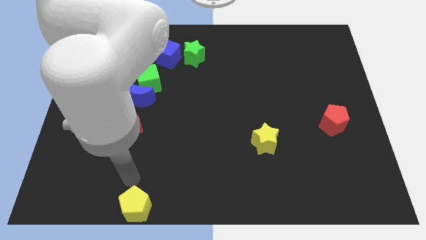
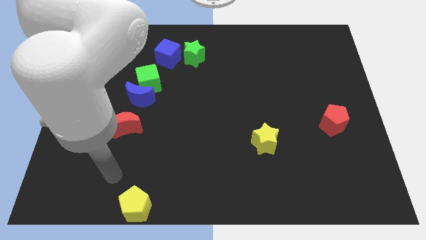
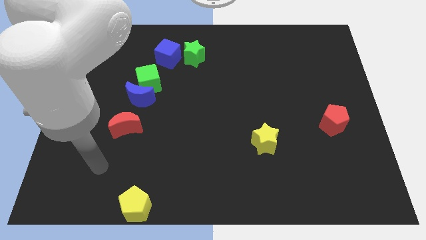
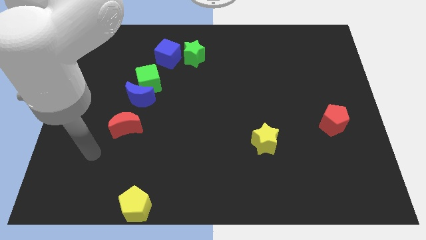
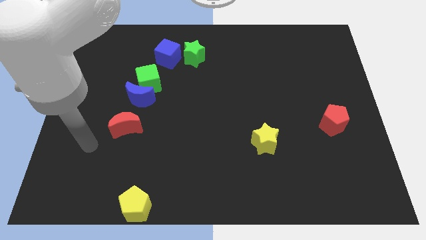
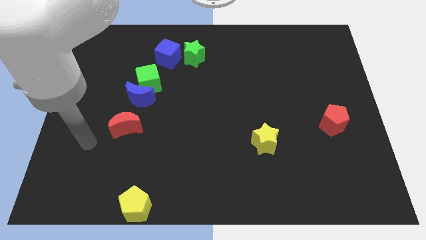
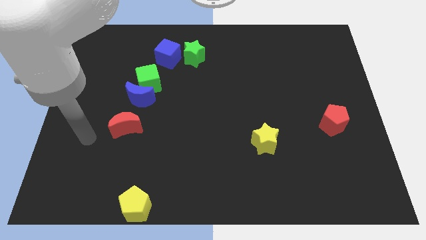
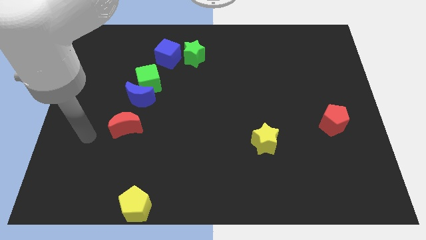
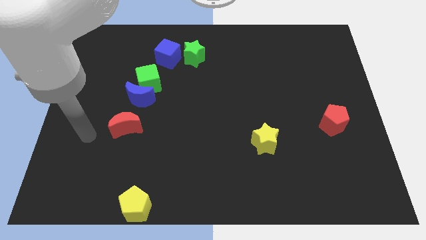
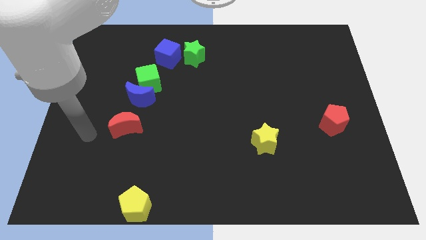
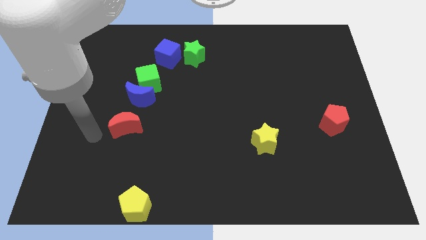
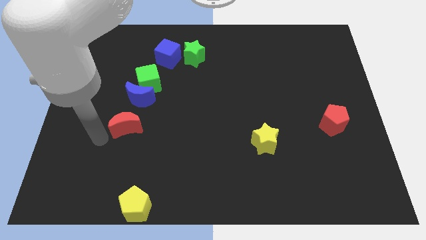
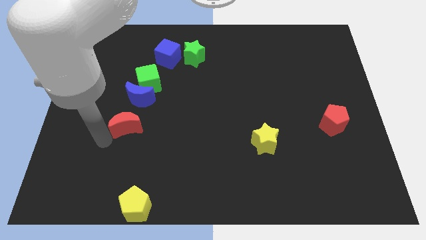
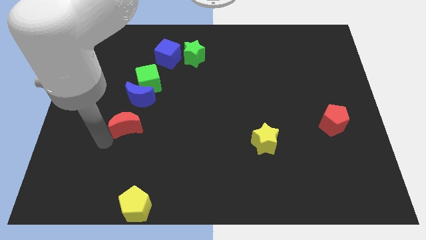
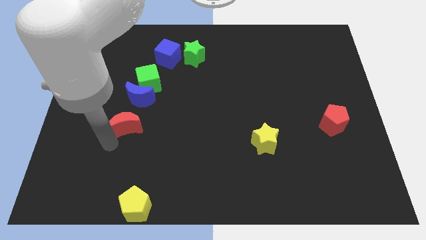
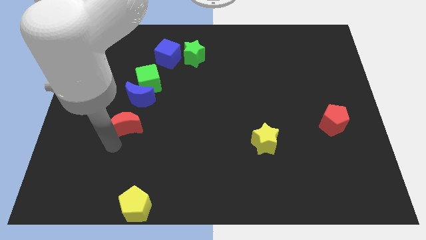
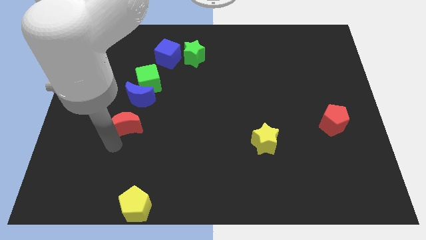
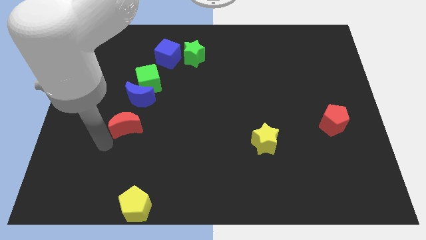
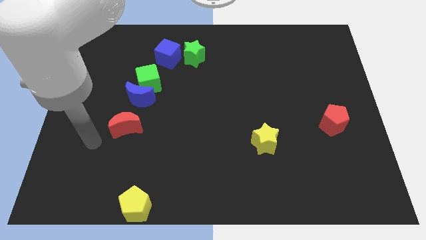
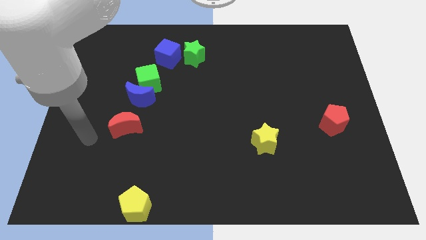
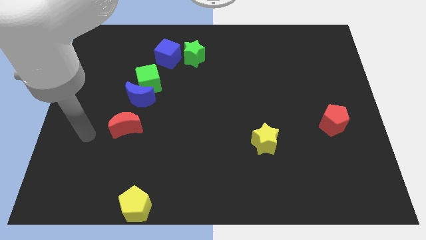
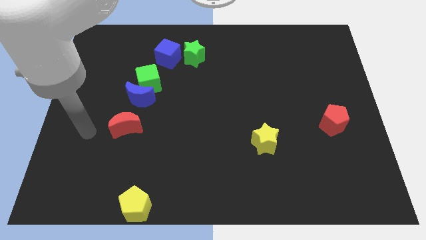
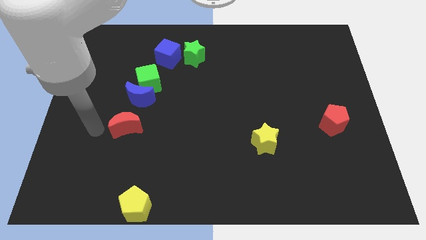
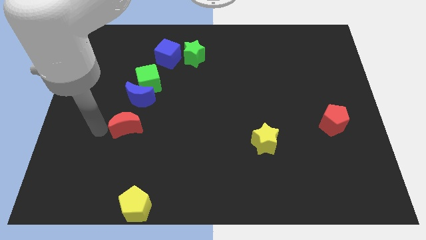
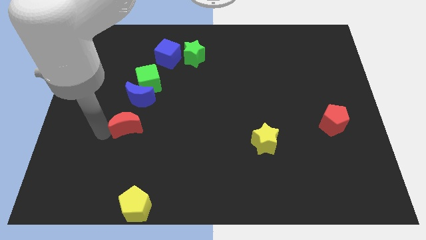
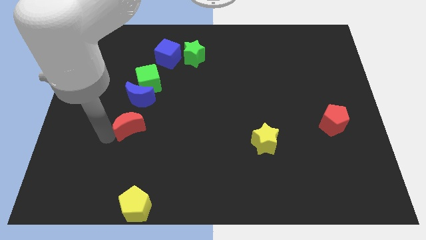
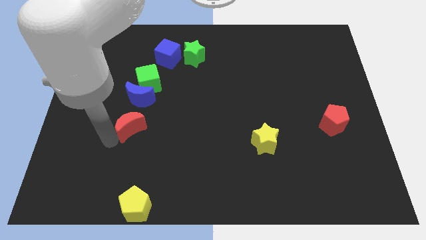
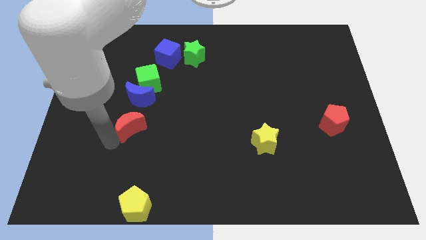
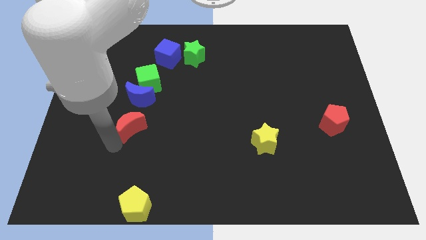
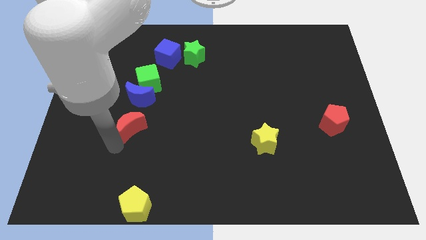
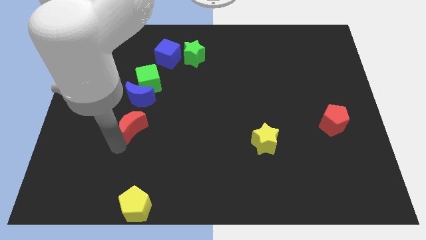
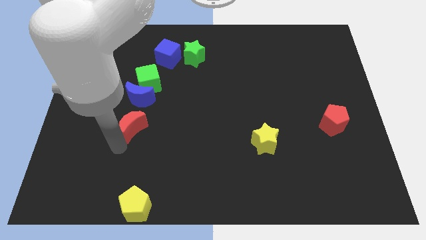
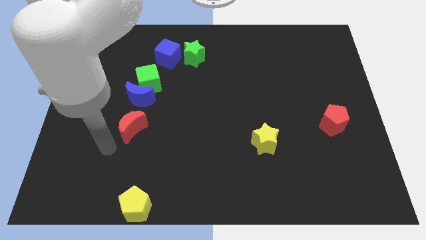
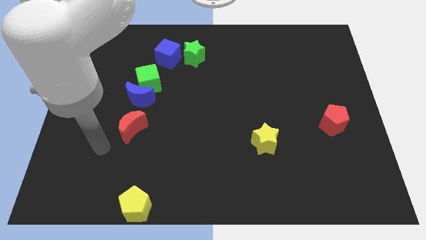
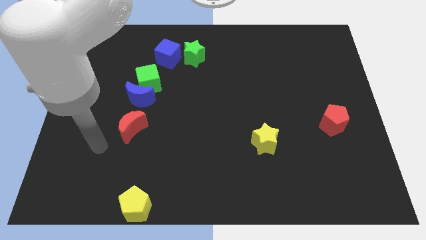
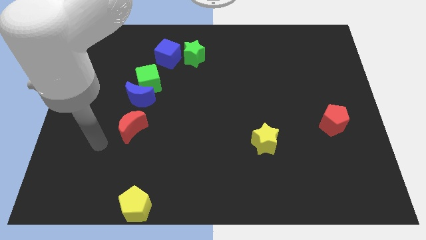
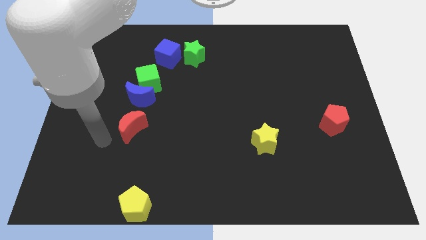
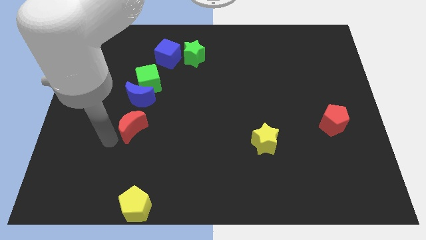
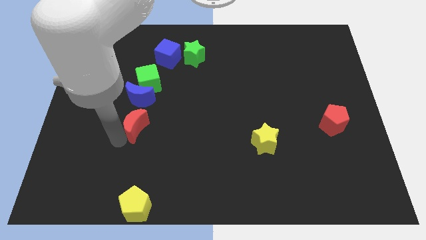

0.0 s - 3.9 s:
move the red crescent to the top of the yellow pentagon

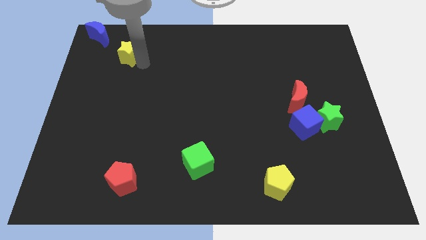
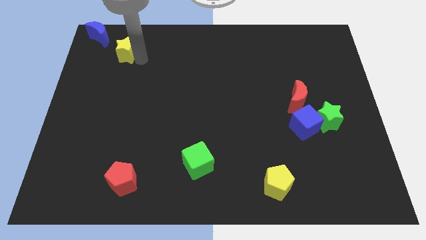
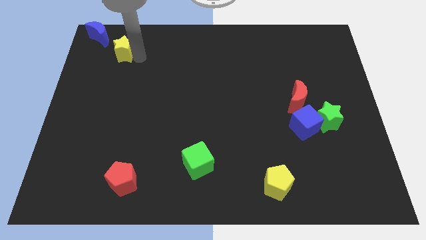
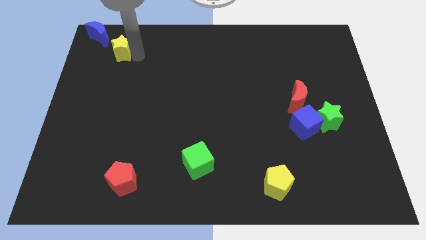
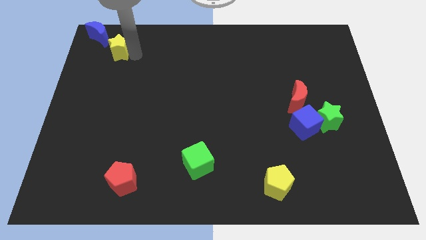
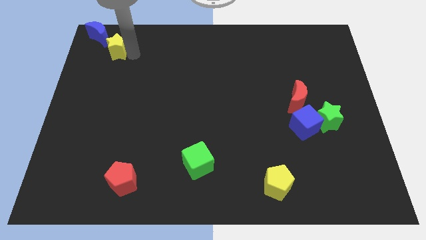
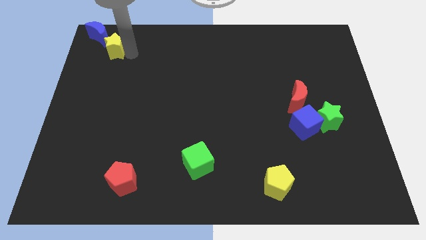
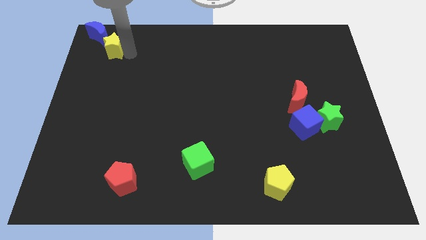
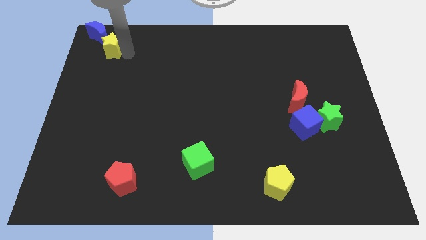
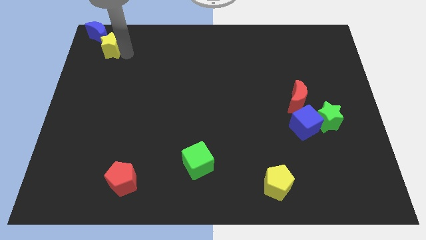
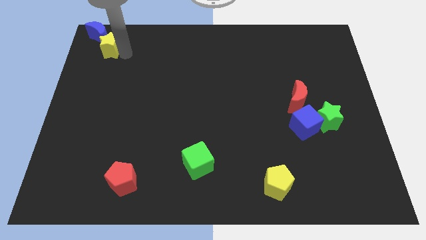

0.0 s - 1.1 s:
push the yellow star towards the top left corner of the board

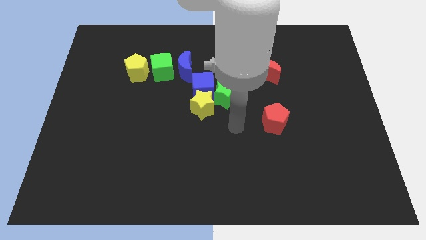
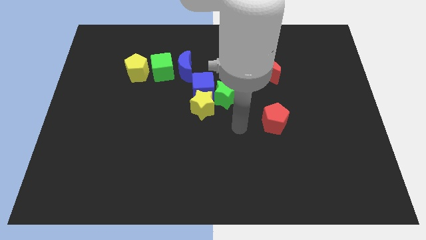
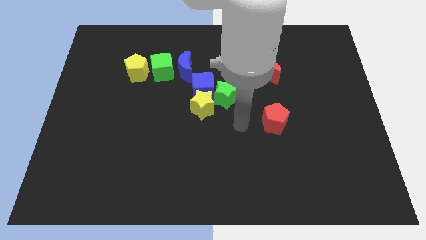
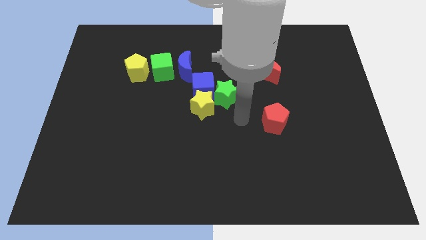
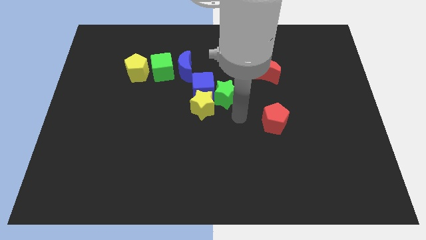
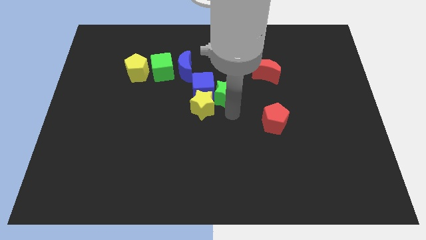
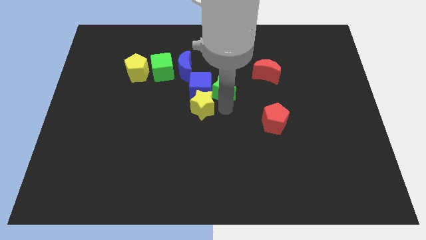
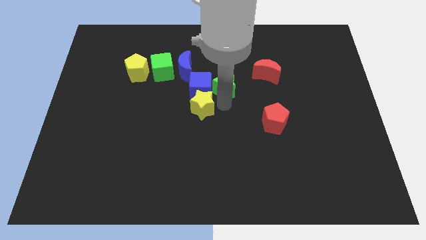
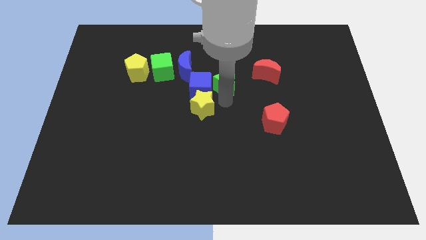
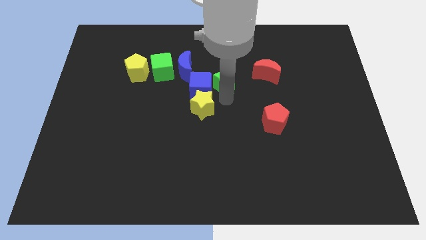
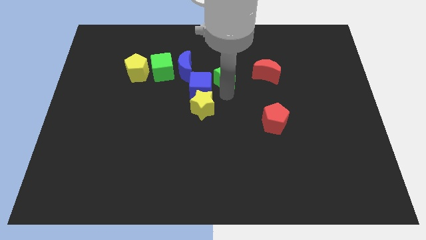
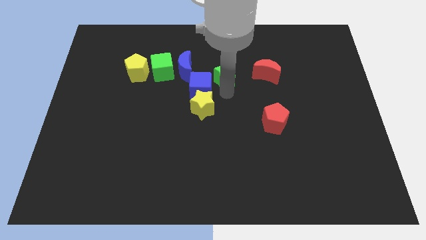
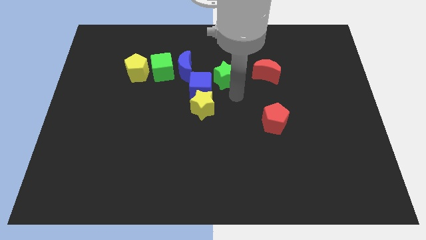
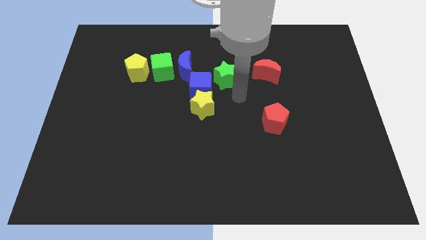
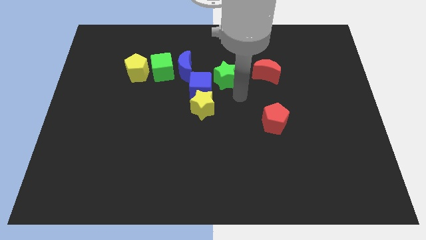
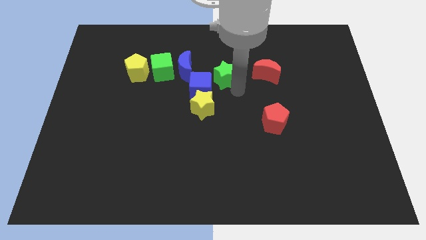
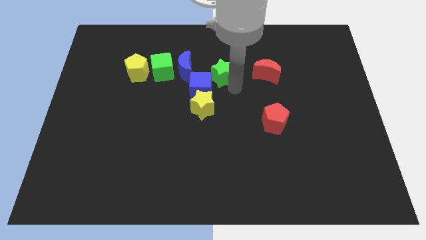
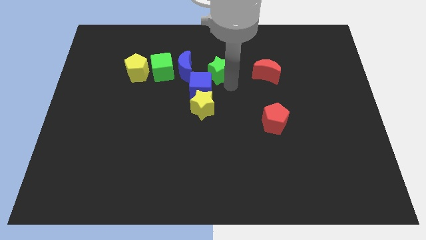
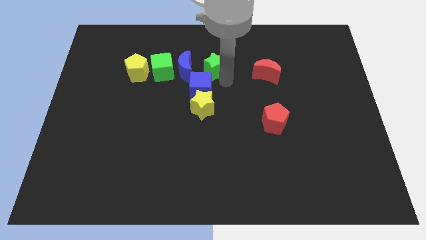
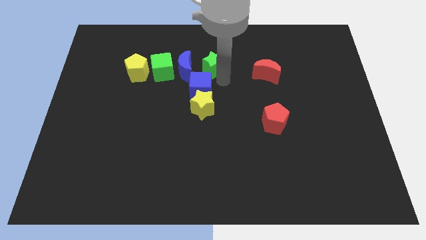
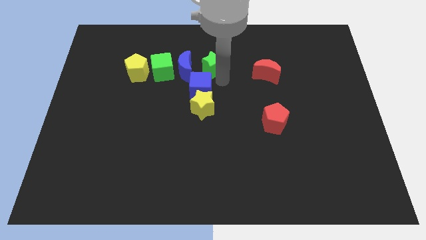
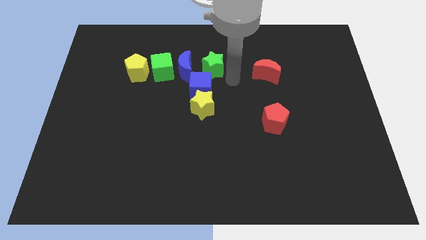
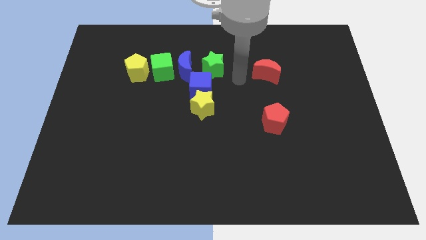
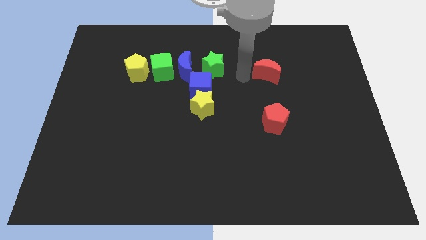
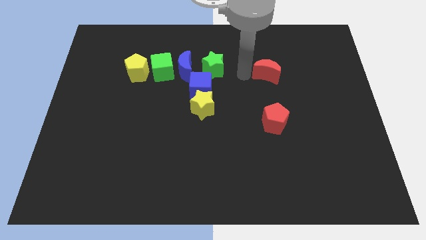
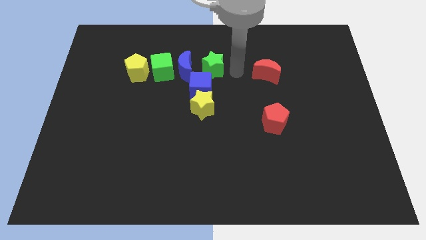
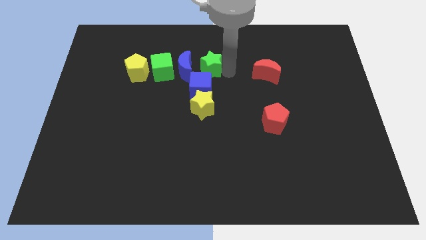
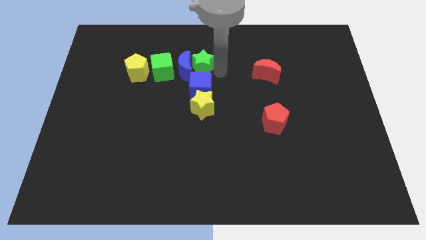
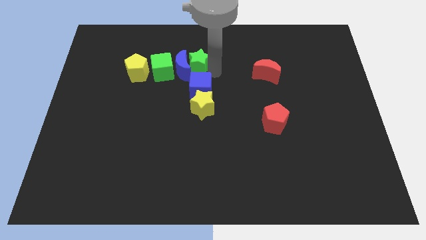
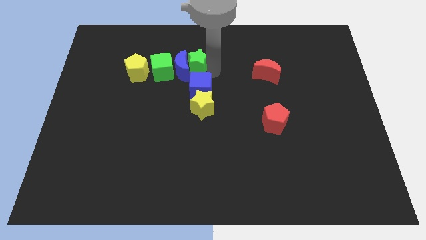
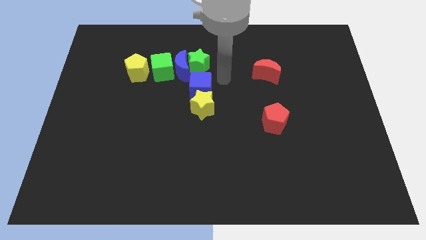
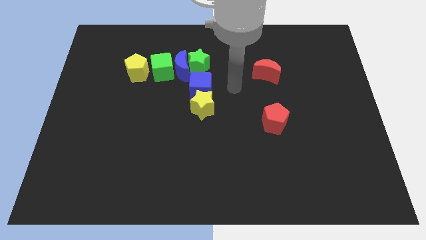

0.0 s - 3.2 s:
push the green star to the right of blue crescent

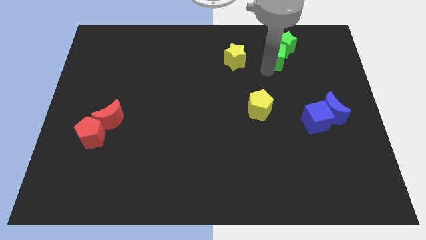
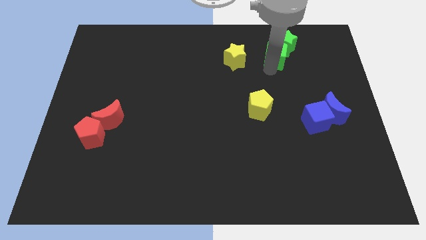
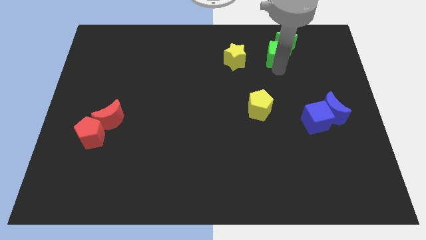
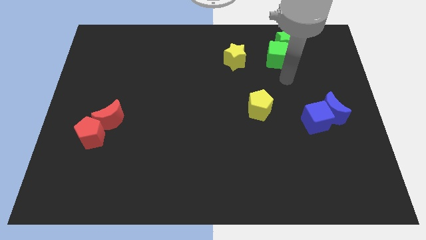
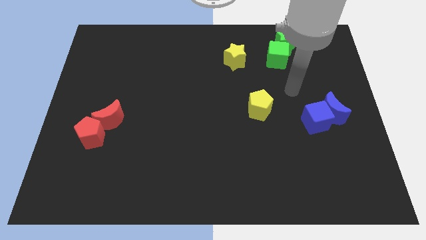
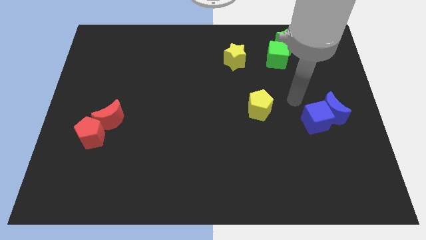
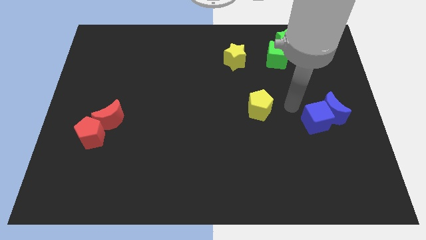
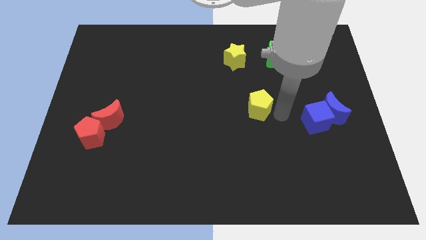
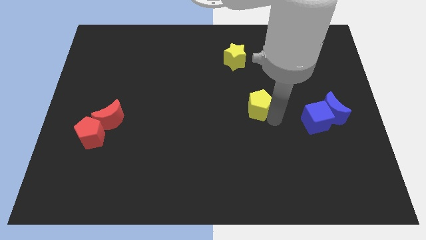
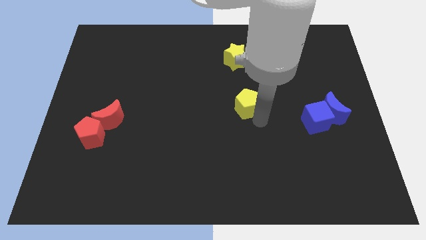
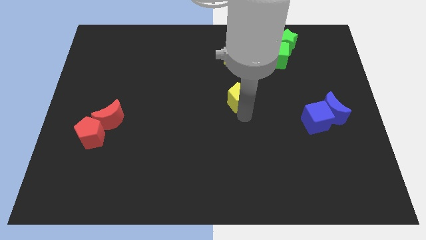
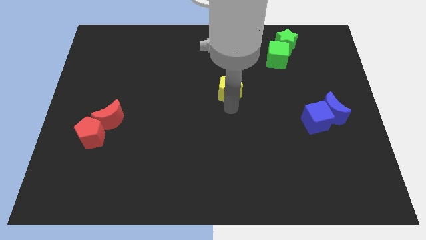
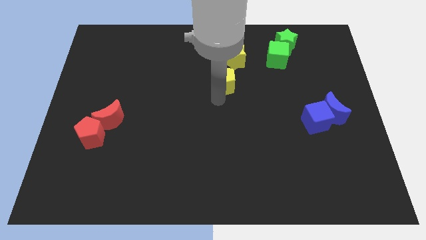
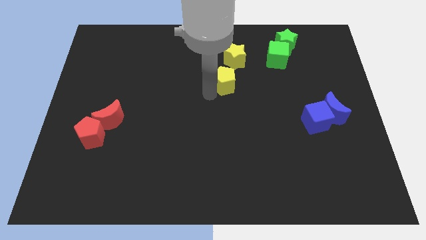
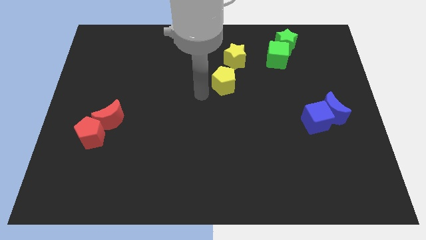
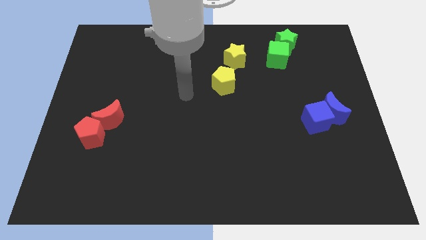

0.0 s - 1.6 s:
push the yellow pentagon upward
